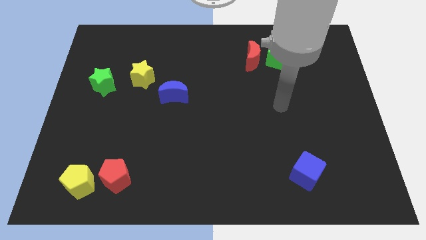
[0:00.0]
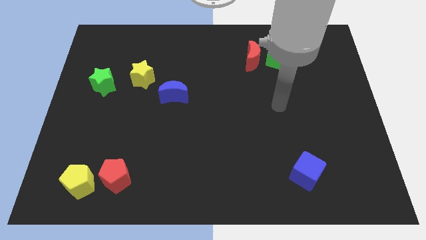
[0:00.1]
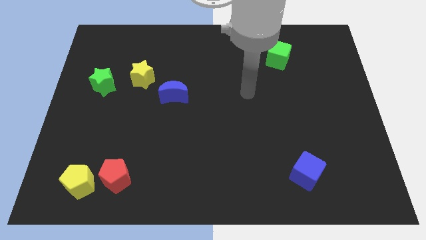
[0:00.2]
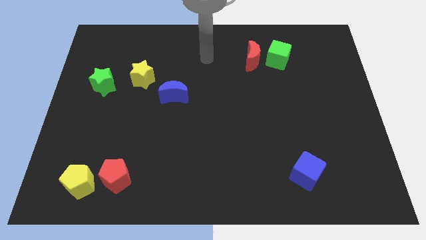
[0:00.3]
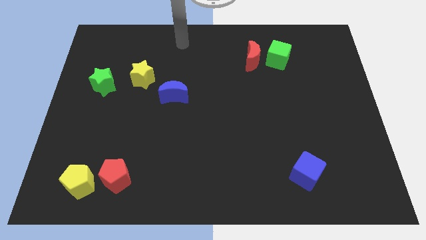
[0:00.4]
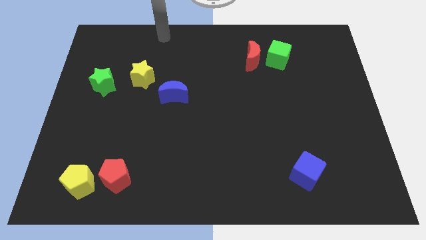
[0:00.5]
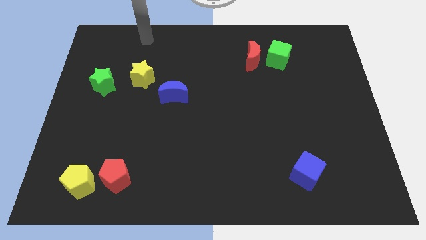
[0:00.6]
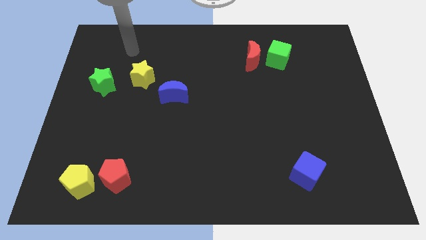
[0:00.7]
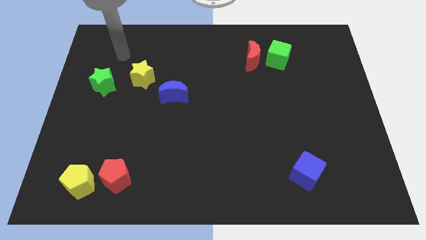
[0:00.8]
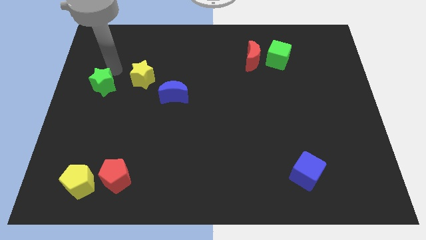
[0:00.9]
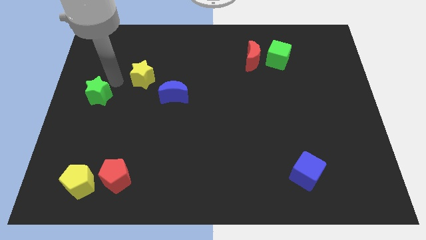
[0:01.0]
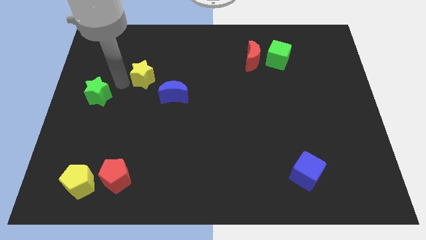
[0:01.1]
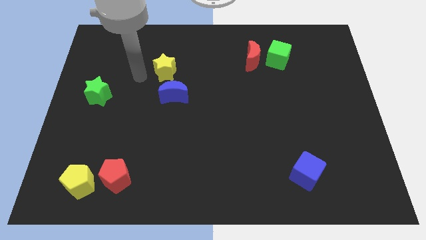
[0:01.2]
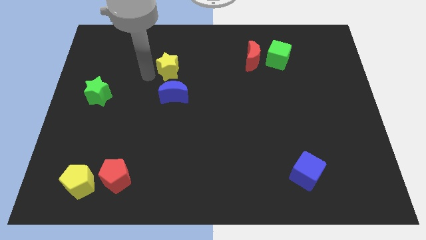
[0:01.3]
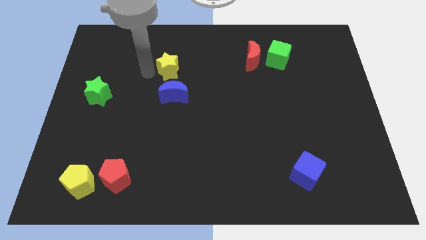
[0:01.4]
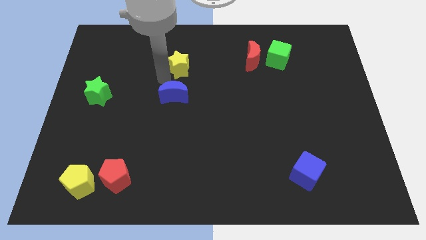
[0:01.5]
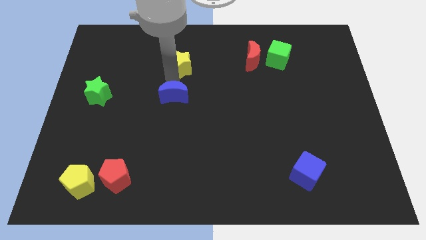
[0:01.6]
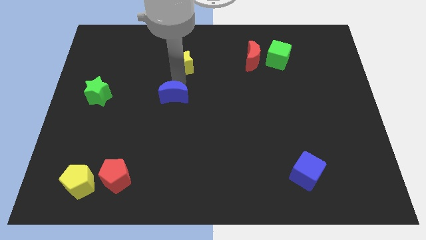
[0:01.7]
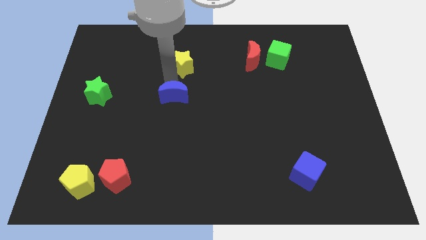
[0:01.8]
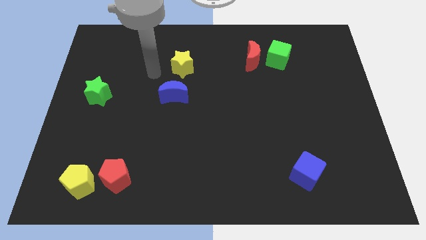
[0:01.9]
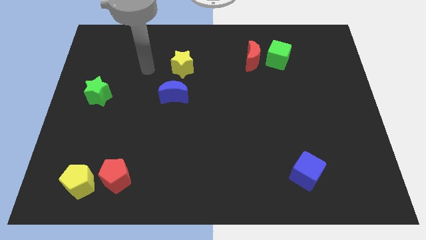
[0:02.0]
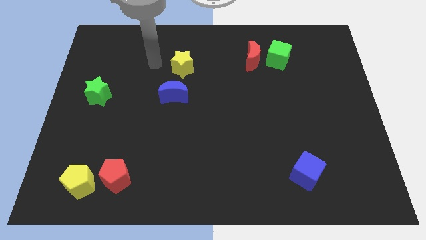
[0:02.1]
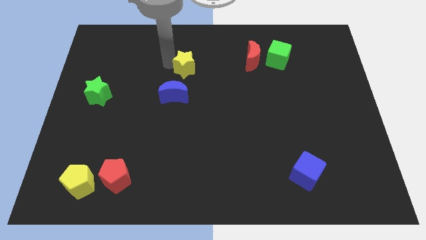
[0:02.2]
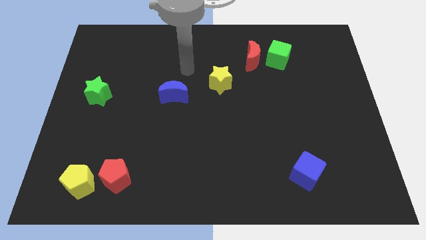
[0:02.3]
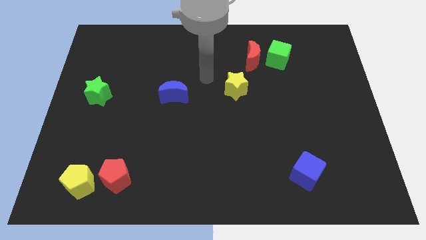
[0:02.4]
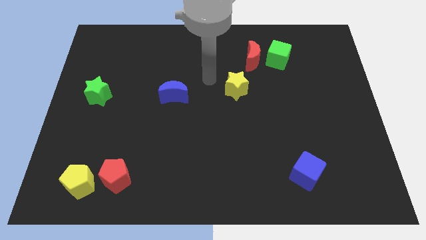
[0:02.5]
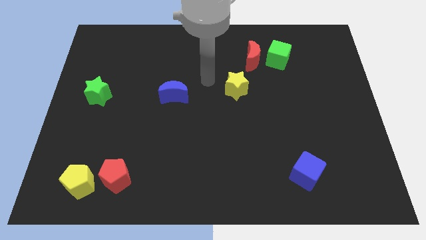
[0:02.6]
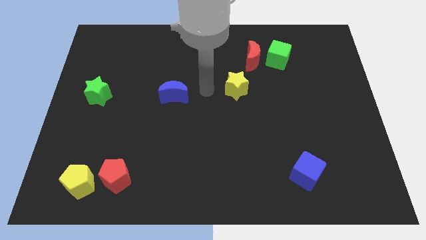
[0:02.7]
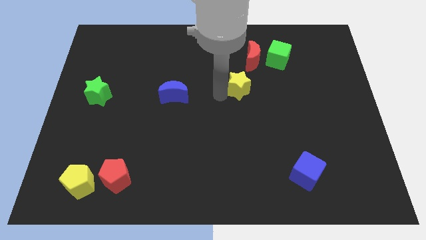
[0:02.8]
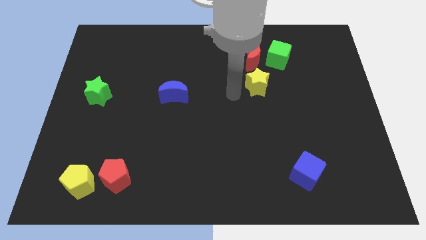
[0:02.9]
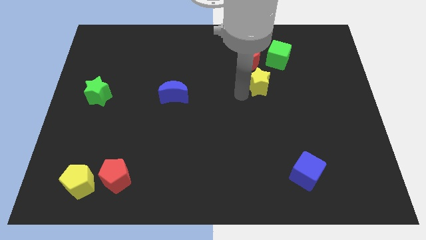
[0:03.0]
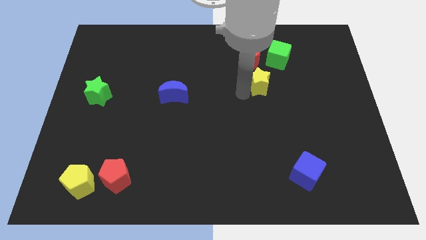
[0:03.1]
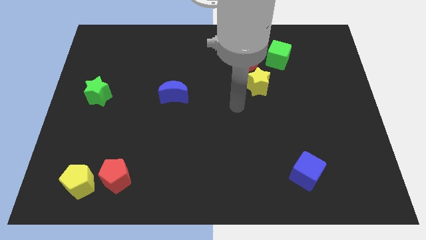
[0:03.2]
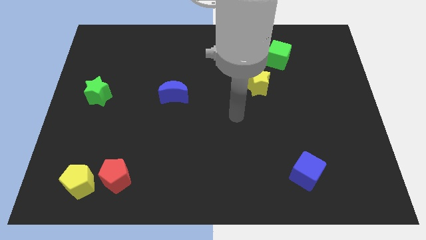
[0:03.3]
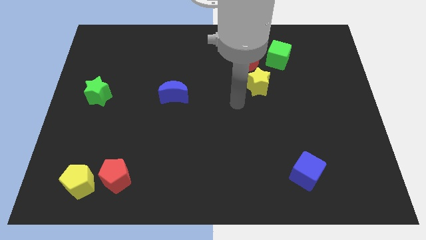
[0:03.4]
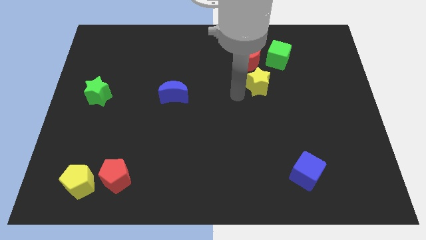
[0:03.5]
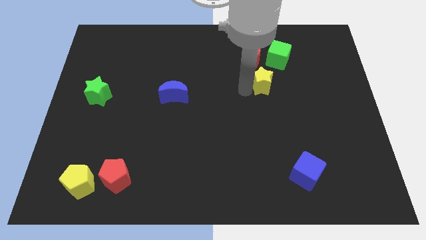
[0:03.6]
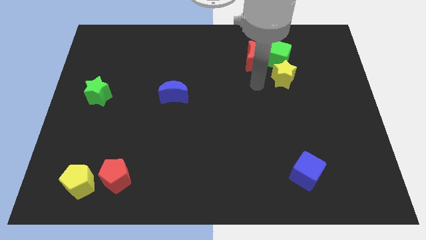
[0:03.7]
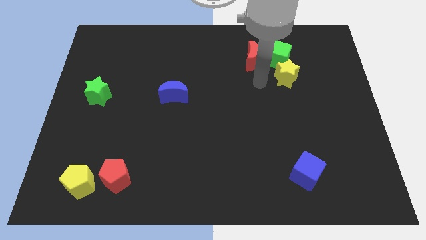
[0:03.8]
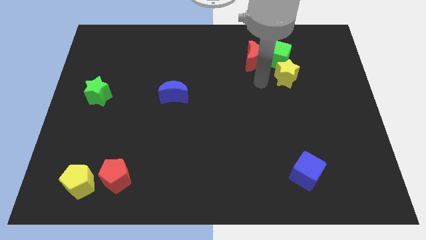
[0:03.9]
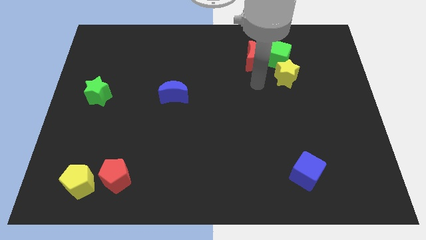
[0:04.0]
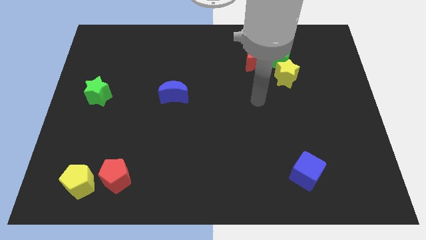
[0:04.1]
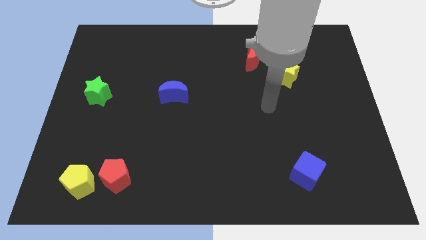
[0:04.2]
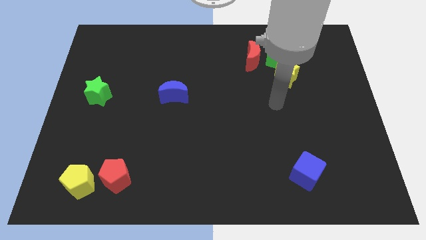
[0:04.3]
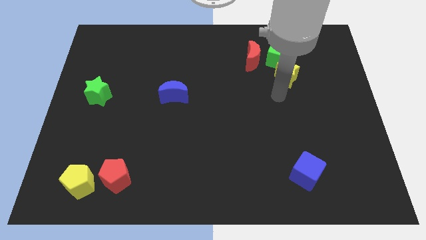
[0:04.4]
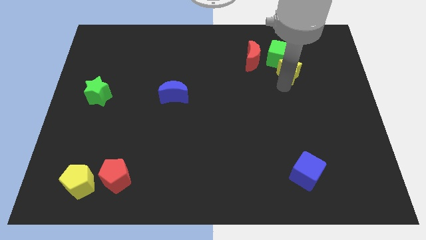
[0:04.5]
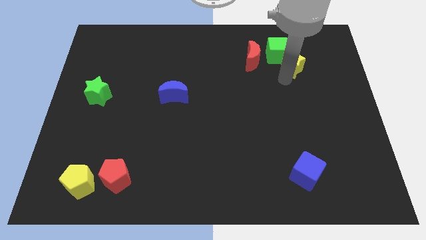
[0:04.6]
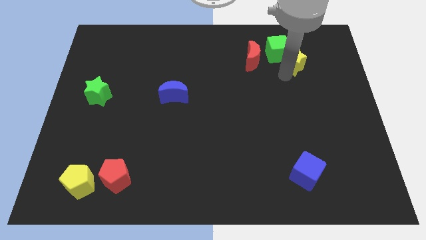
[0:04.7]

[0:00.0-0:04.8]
put the yellow star towards the green cube

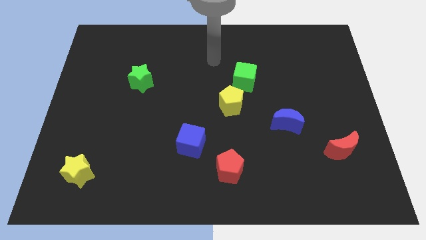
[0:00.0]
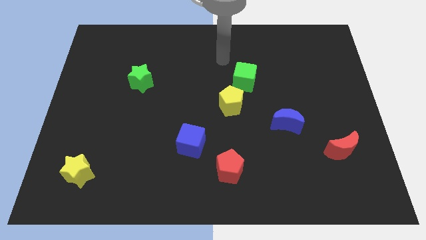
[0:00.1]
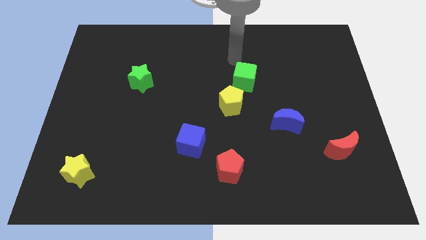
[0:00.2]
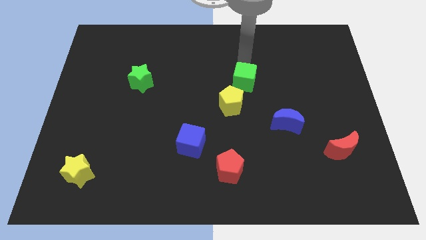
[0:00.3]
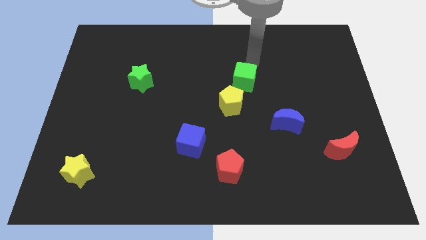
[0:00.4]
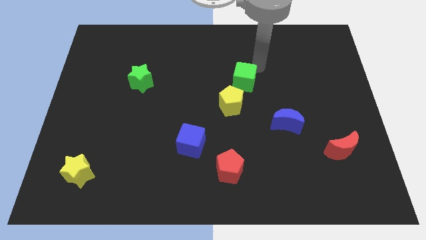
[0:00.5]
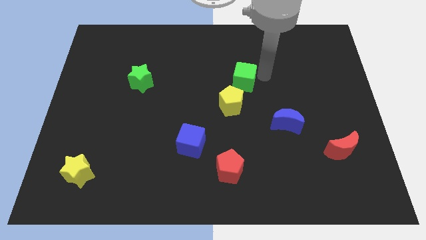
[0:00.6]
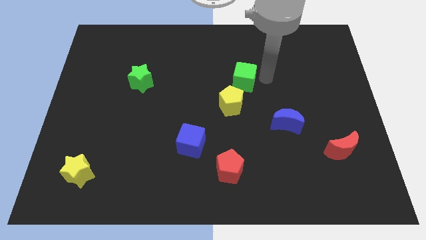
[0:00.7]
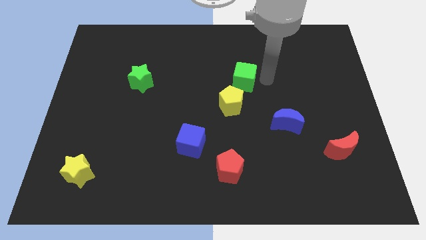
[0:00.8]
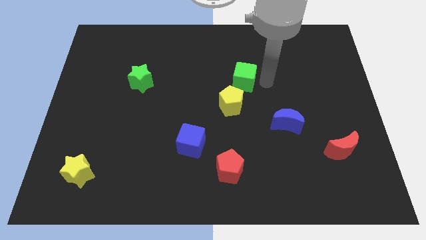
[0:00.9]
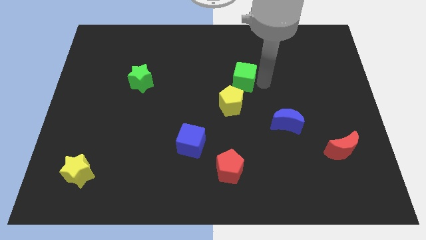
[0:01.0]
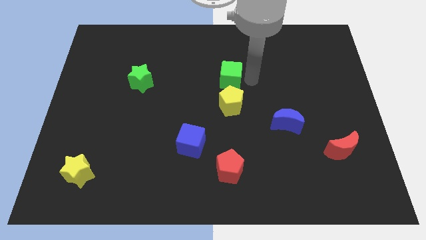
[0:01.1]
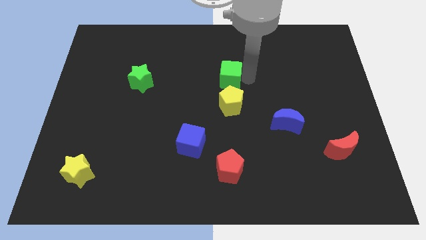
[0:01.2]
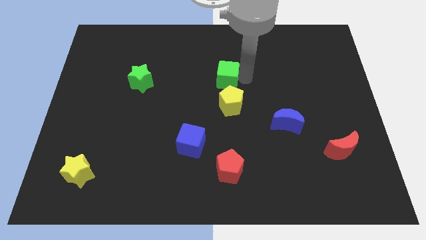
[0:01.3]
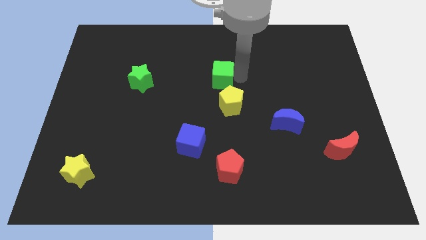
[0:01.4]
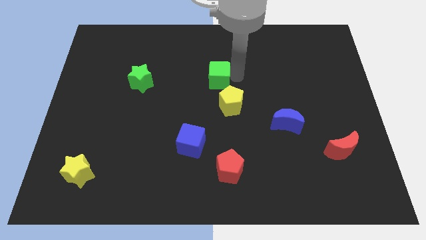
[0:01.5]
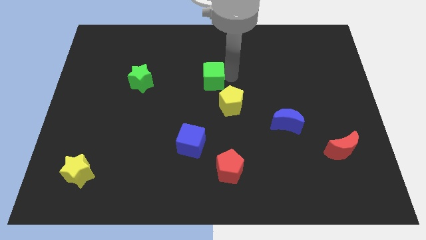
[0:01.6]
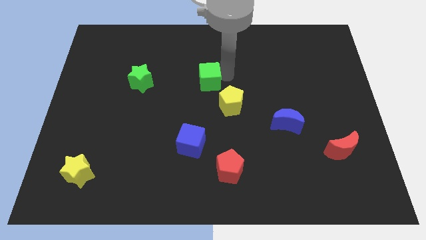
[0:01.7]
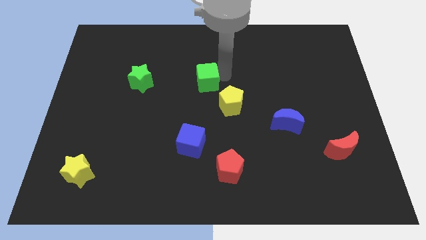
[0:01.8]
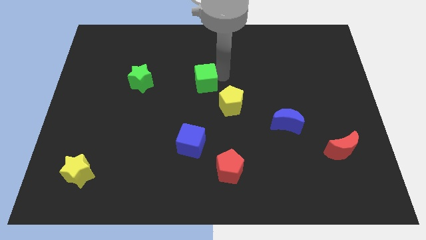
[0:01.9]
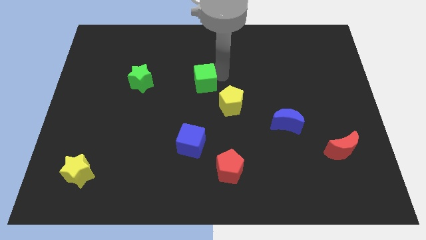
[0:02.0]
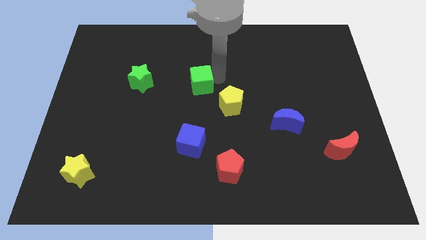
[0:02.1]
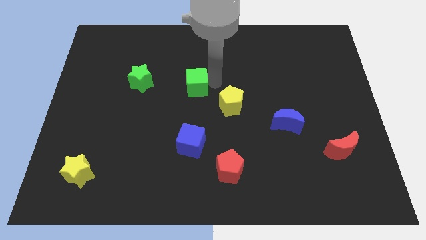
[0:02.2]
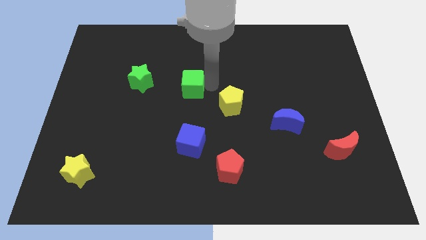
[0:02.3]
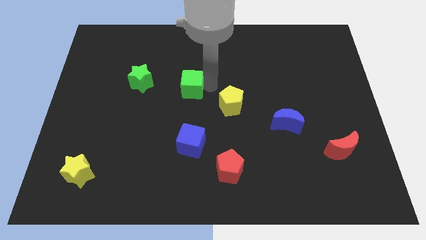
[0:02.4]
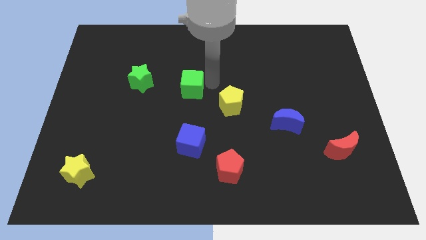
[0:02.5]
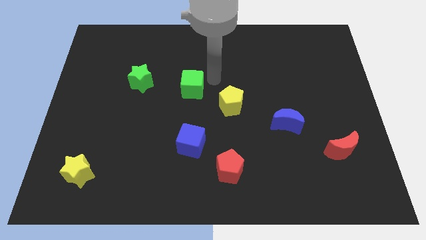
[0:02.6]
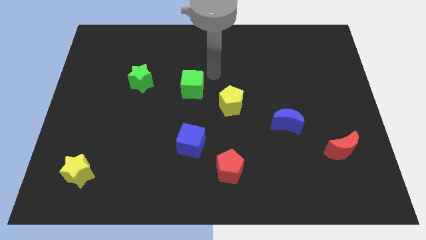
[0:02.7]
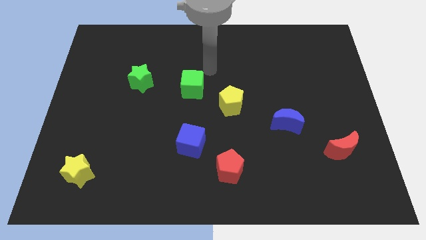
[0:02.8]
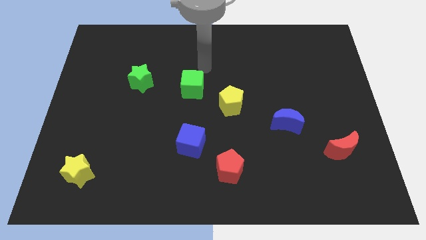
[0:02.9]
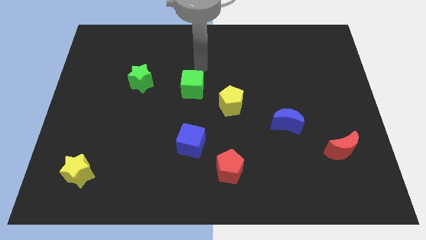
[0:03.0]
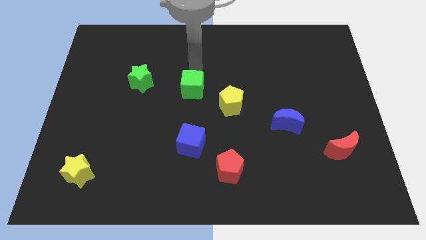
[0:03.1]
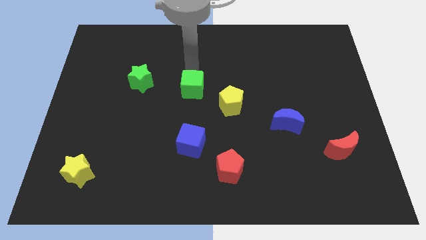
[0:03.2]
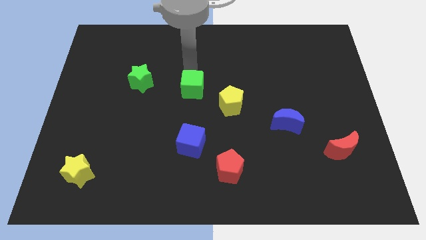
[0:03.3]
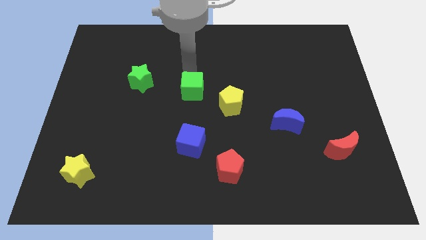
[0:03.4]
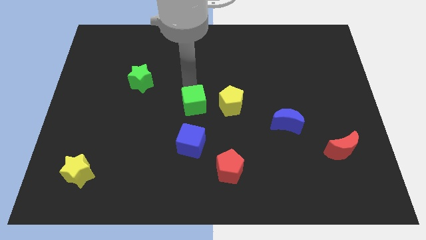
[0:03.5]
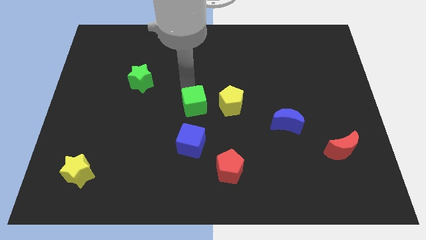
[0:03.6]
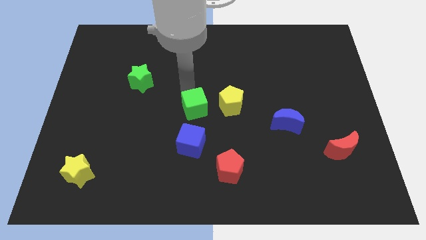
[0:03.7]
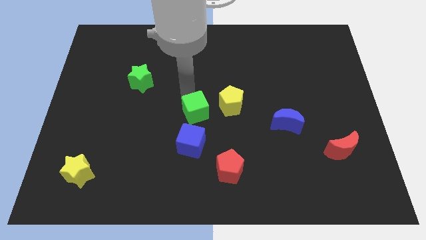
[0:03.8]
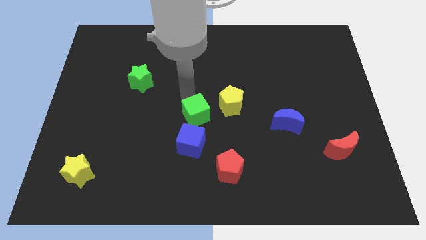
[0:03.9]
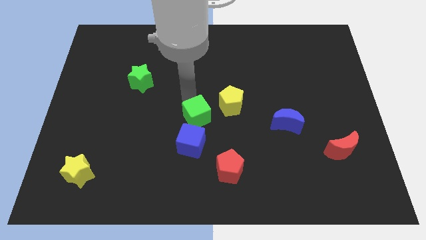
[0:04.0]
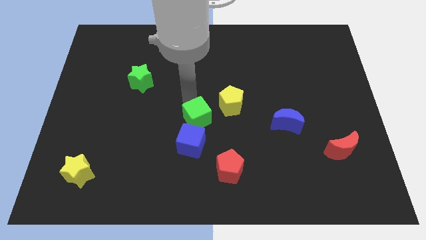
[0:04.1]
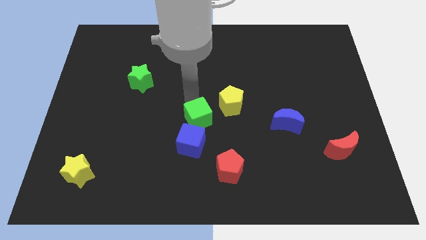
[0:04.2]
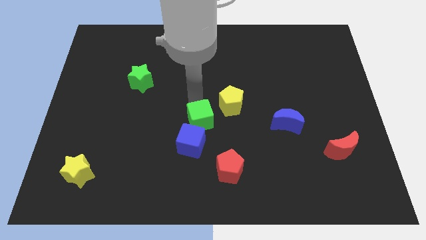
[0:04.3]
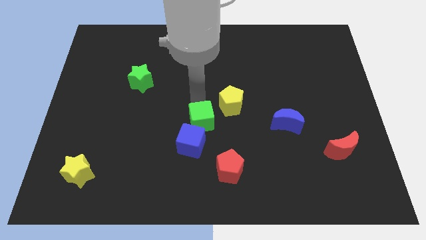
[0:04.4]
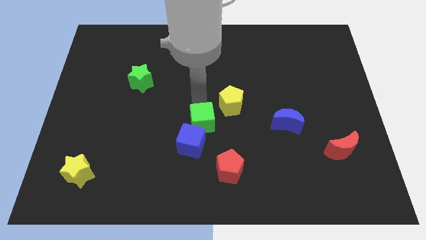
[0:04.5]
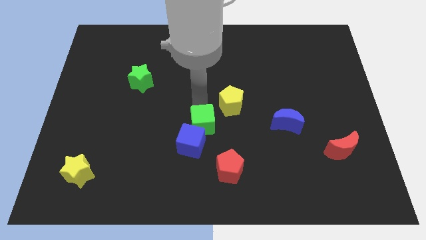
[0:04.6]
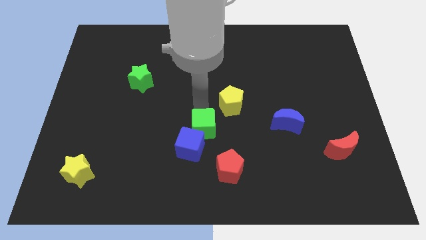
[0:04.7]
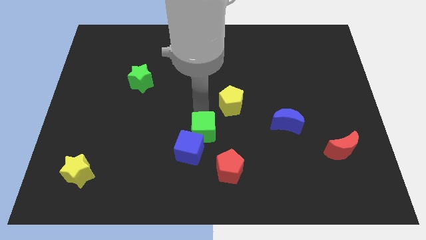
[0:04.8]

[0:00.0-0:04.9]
put the green cube to the blue cube
